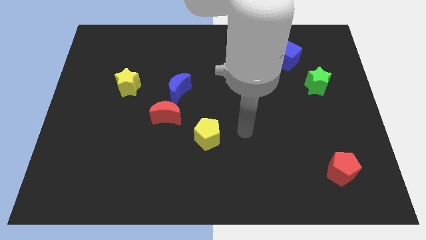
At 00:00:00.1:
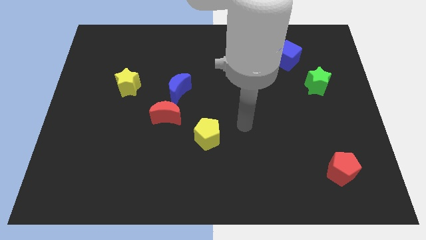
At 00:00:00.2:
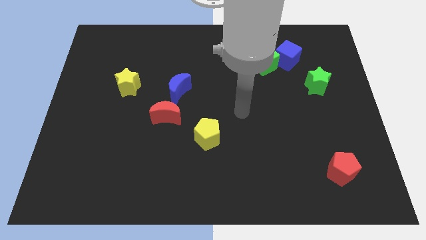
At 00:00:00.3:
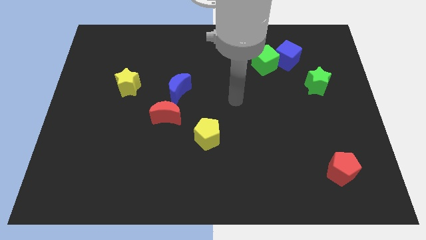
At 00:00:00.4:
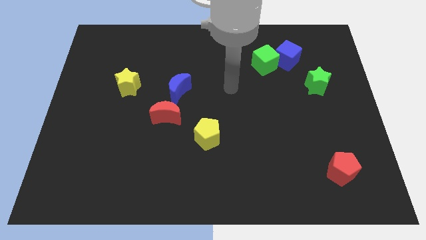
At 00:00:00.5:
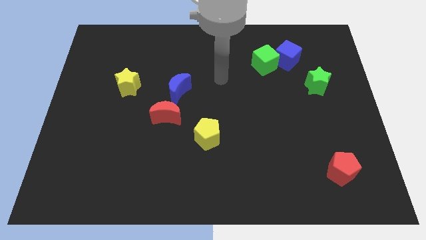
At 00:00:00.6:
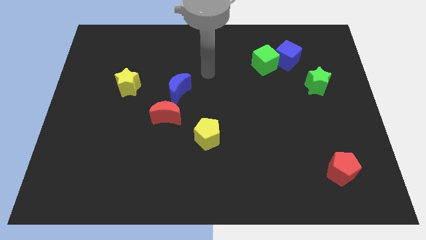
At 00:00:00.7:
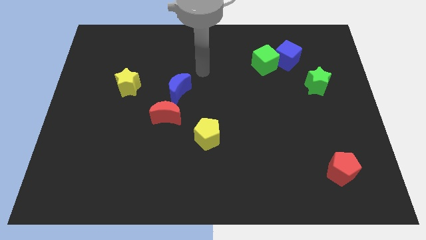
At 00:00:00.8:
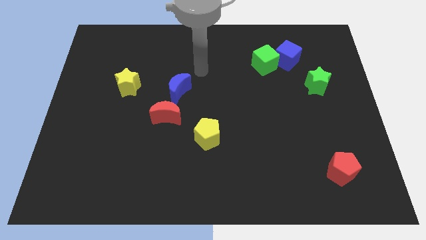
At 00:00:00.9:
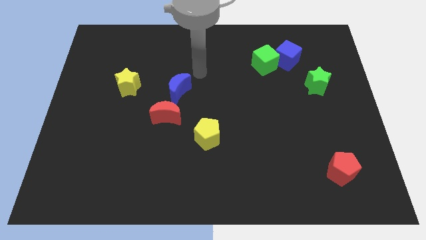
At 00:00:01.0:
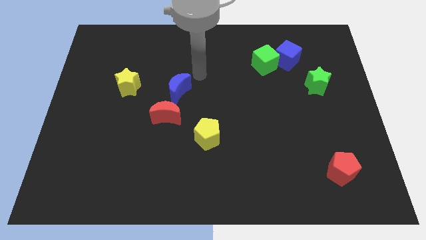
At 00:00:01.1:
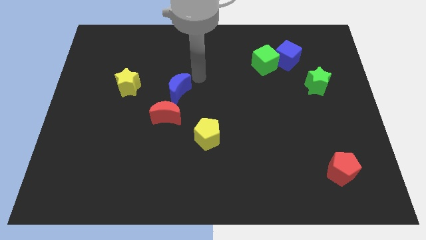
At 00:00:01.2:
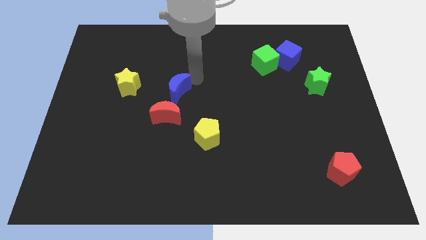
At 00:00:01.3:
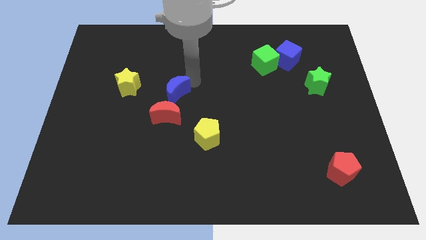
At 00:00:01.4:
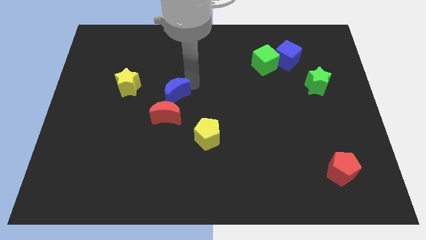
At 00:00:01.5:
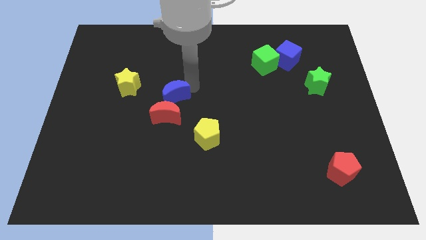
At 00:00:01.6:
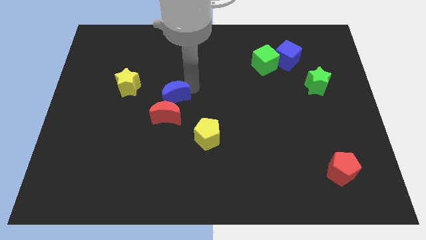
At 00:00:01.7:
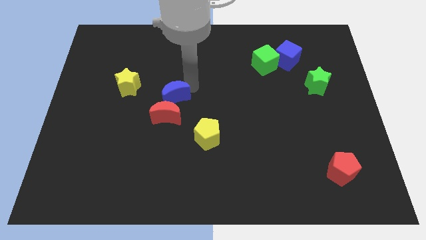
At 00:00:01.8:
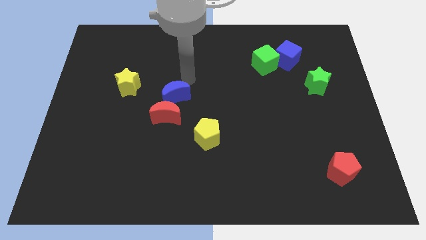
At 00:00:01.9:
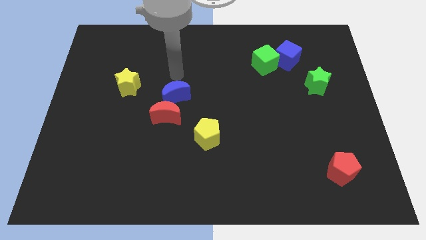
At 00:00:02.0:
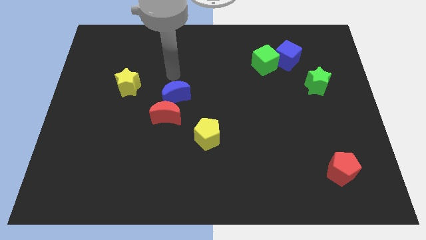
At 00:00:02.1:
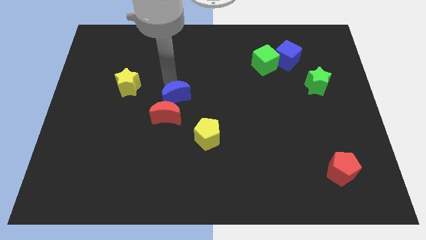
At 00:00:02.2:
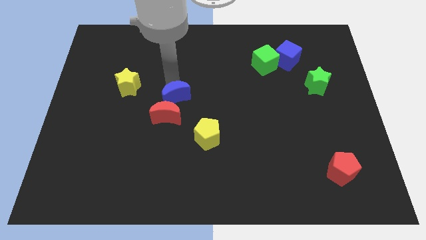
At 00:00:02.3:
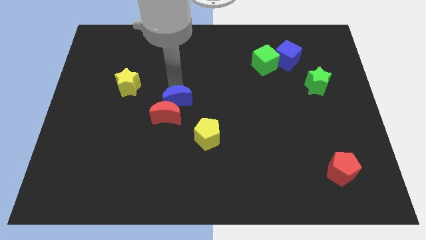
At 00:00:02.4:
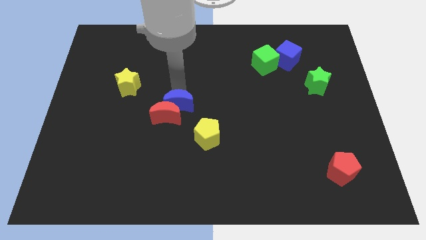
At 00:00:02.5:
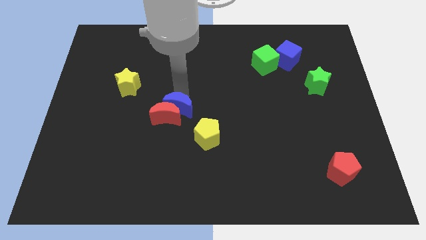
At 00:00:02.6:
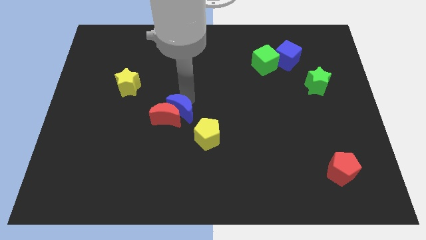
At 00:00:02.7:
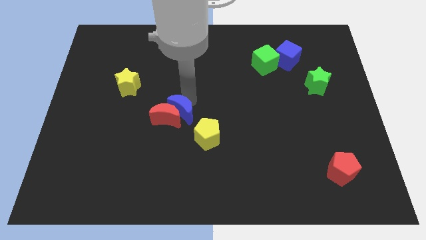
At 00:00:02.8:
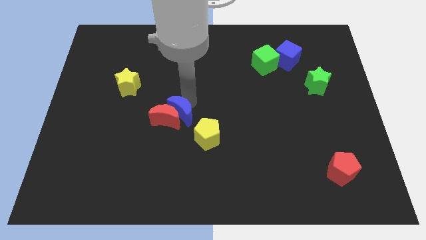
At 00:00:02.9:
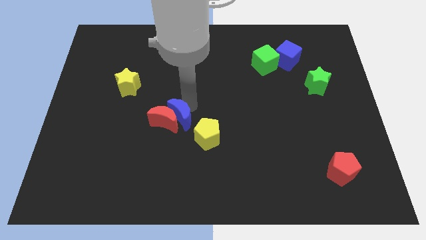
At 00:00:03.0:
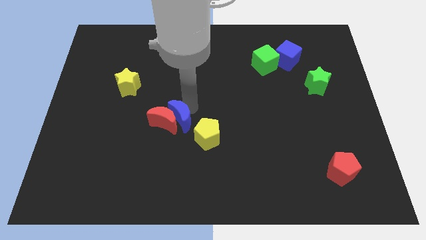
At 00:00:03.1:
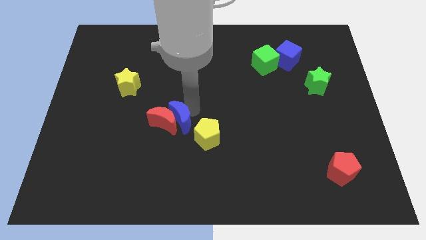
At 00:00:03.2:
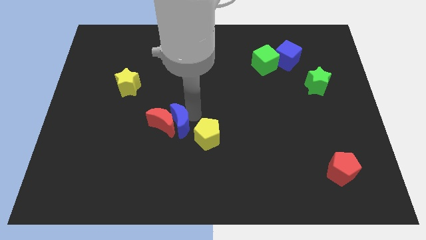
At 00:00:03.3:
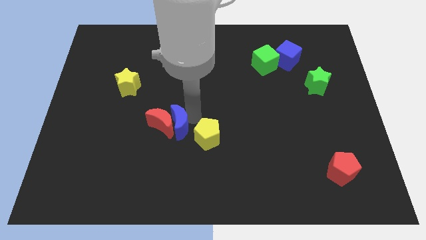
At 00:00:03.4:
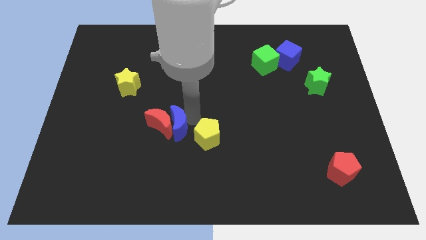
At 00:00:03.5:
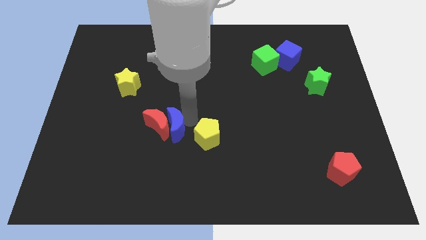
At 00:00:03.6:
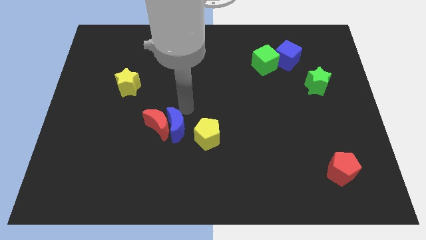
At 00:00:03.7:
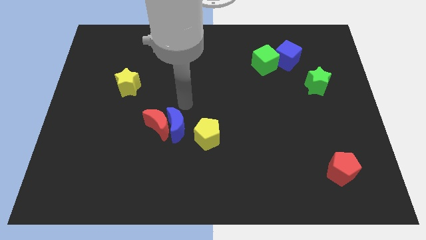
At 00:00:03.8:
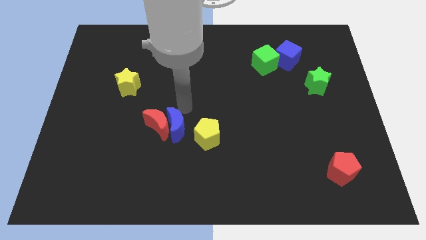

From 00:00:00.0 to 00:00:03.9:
place the blue moon in between the red moon and yellow pentagon

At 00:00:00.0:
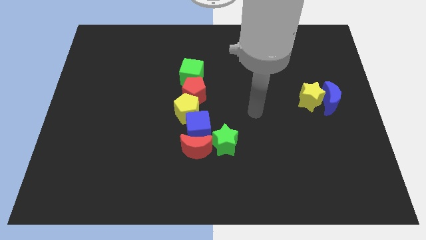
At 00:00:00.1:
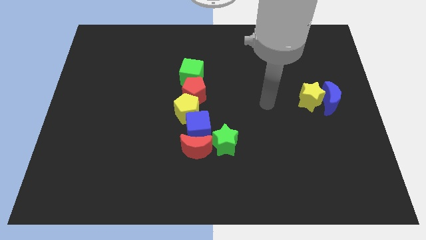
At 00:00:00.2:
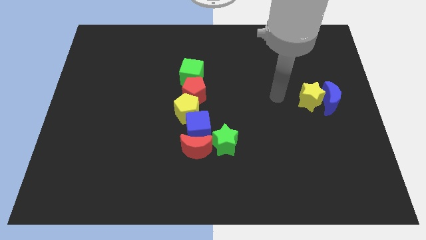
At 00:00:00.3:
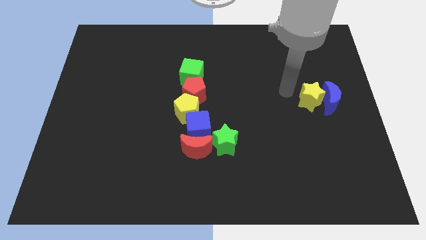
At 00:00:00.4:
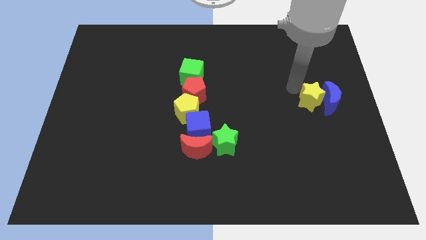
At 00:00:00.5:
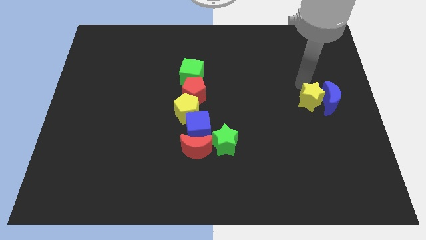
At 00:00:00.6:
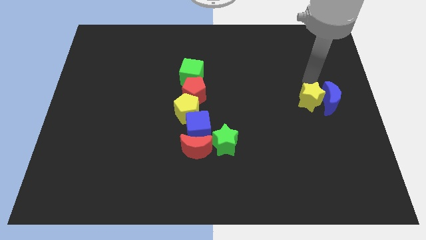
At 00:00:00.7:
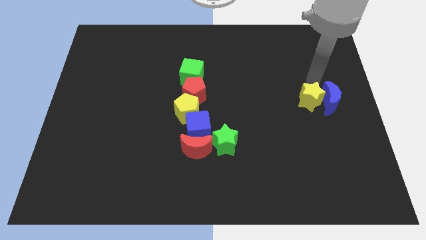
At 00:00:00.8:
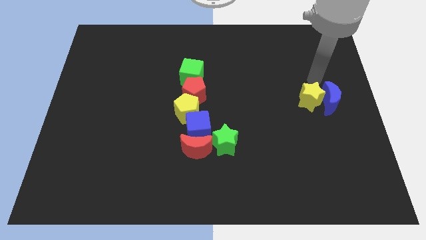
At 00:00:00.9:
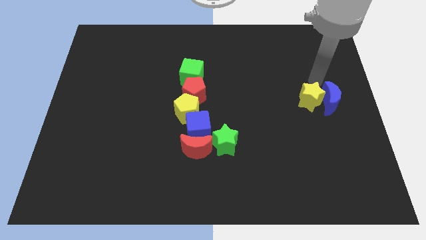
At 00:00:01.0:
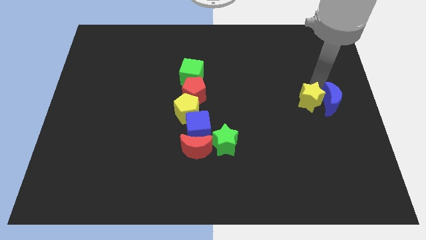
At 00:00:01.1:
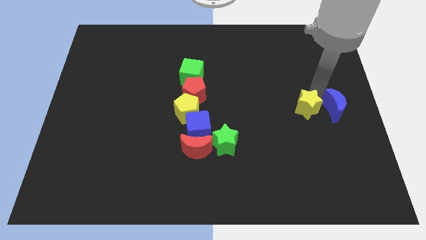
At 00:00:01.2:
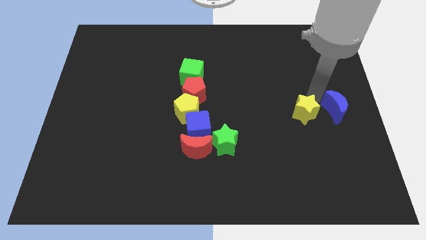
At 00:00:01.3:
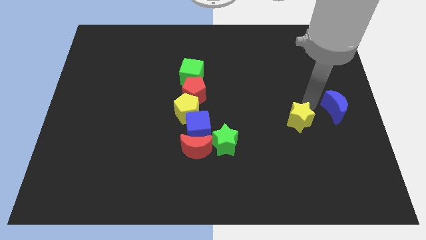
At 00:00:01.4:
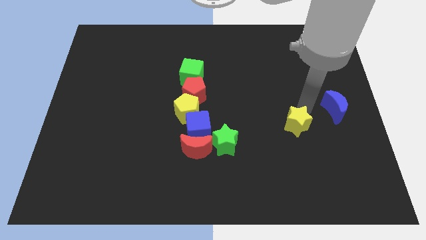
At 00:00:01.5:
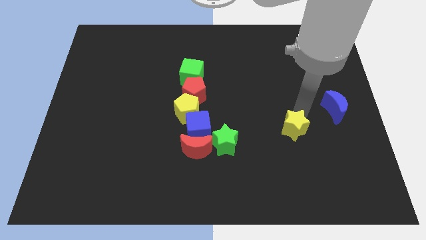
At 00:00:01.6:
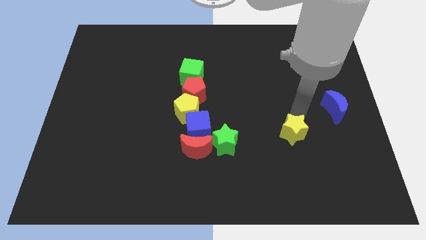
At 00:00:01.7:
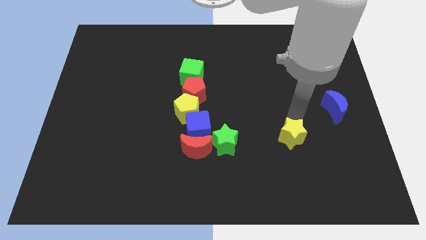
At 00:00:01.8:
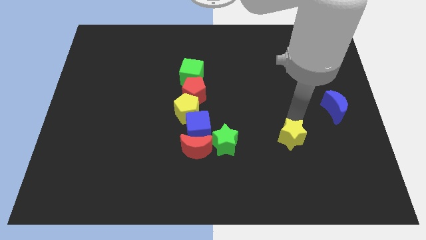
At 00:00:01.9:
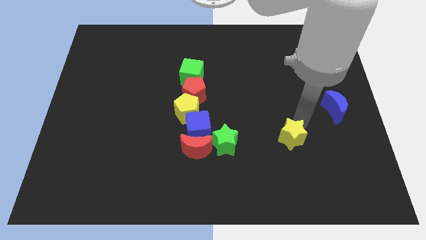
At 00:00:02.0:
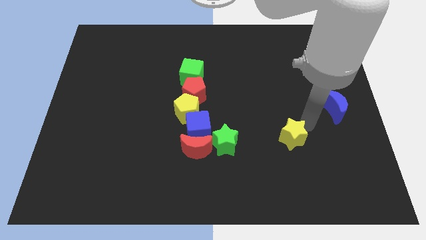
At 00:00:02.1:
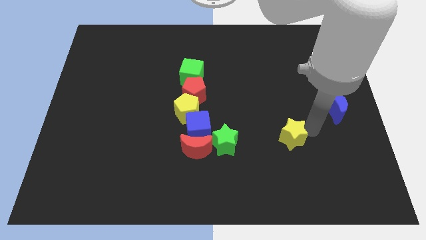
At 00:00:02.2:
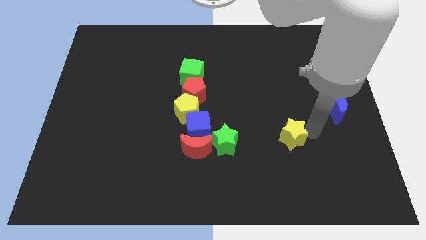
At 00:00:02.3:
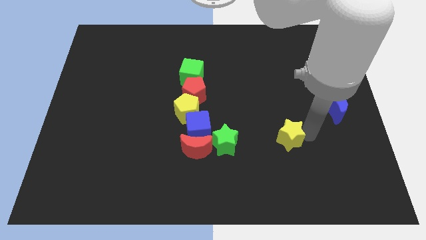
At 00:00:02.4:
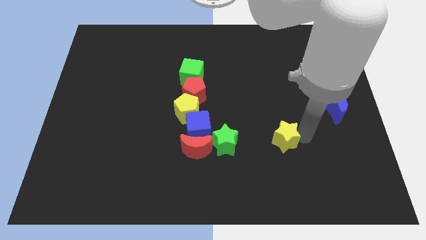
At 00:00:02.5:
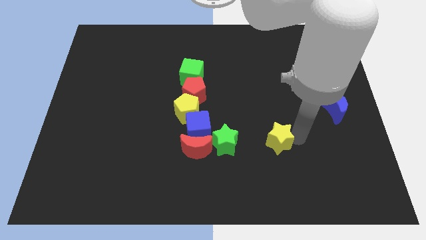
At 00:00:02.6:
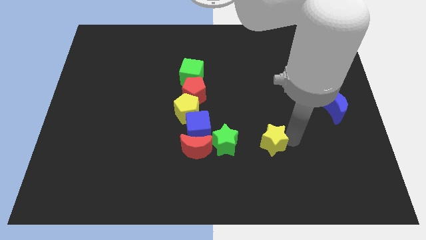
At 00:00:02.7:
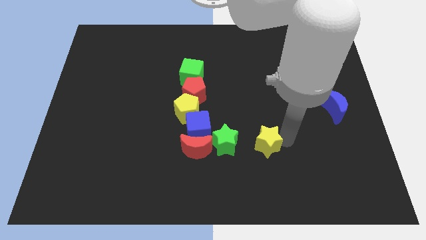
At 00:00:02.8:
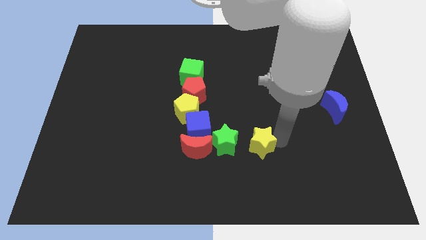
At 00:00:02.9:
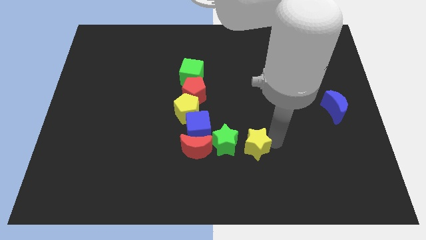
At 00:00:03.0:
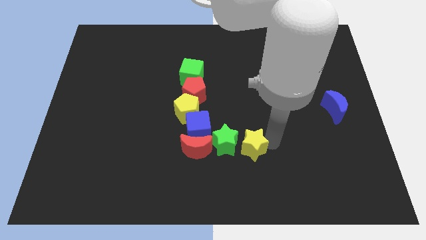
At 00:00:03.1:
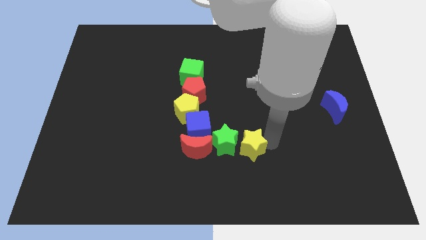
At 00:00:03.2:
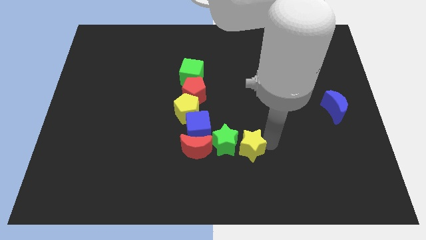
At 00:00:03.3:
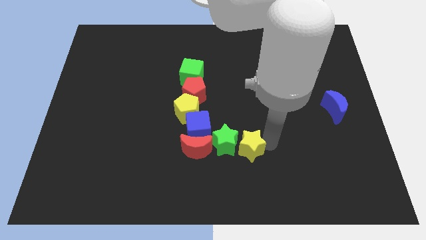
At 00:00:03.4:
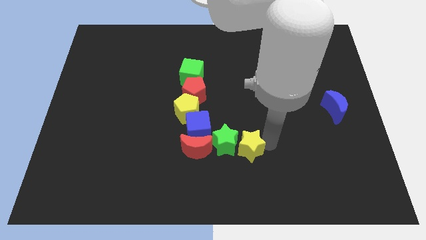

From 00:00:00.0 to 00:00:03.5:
move the yellow star to the right of the green star

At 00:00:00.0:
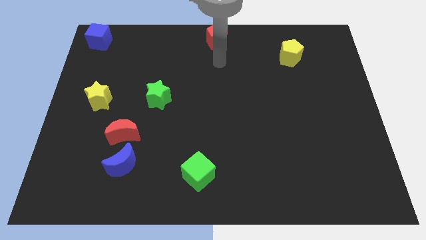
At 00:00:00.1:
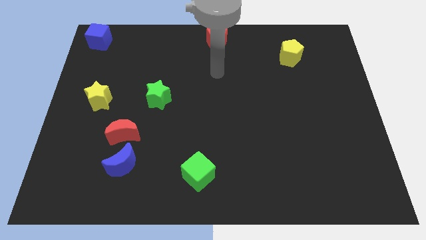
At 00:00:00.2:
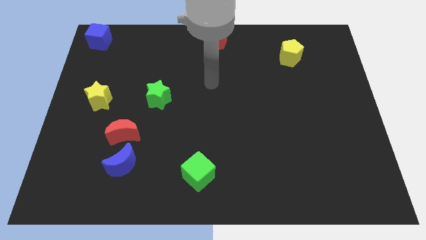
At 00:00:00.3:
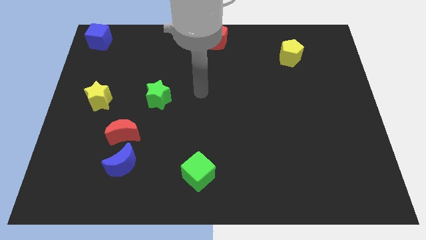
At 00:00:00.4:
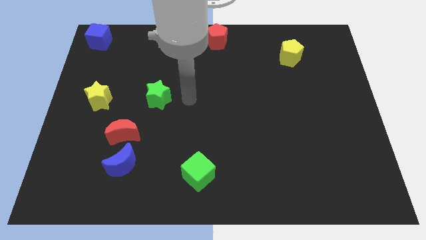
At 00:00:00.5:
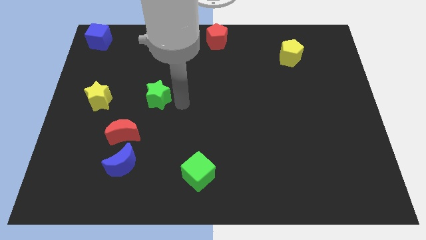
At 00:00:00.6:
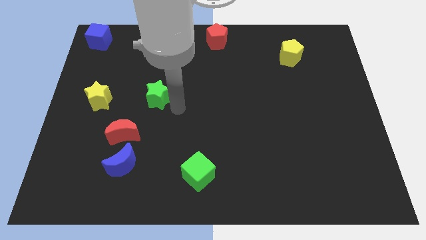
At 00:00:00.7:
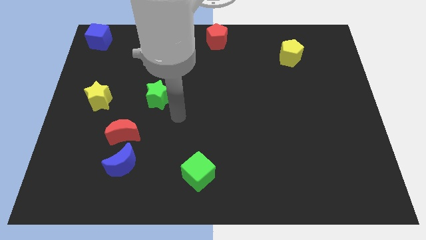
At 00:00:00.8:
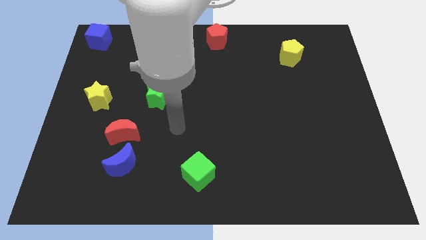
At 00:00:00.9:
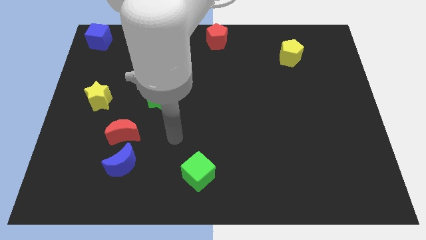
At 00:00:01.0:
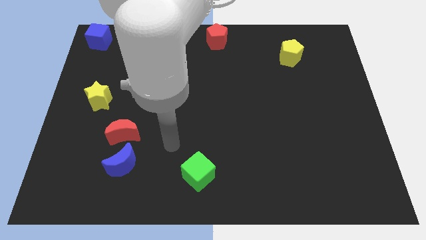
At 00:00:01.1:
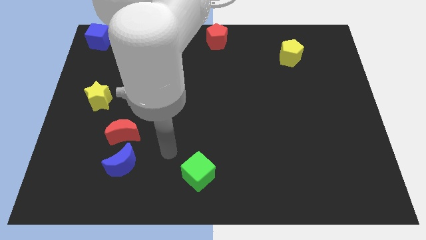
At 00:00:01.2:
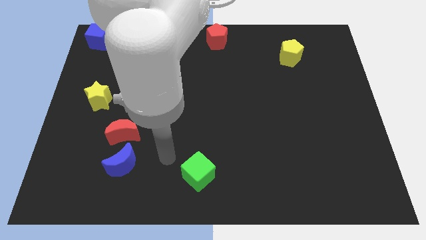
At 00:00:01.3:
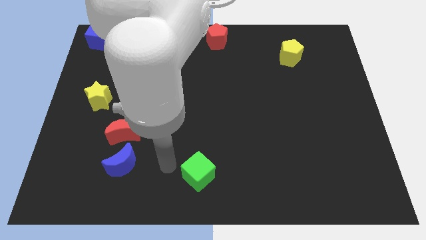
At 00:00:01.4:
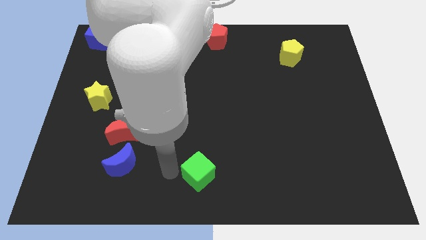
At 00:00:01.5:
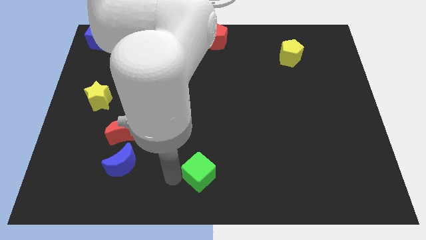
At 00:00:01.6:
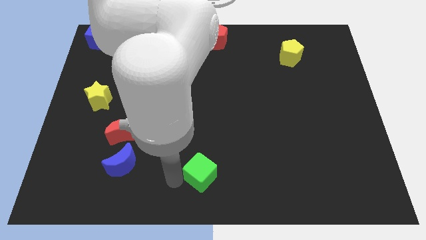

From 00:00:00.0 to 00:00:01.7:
place your arm to the left of green cube
